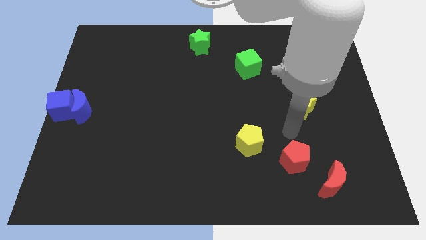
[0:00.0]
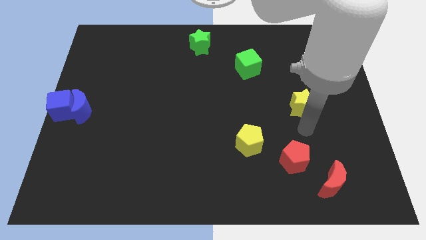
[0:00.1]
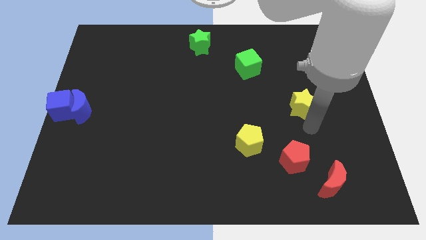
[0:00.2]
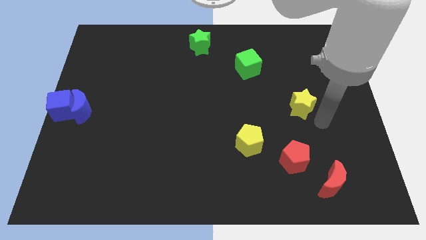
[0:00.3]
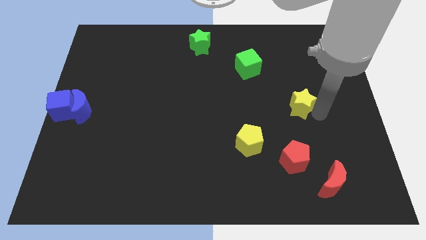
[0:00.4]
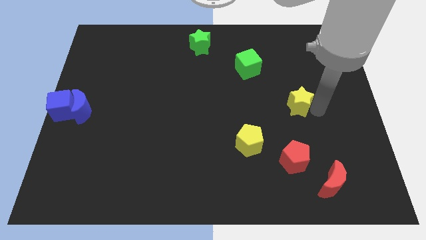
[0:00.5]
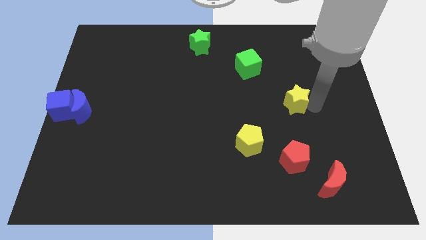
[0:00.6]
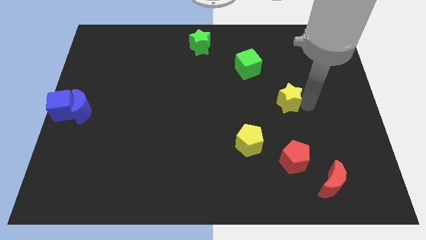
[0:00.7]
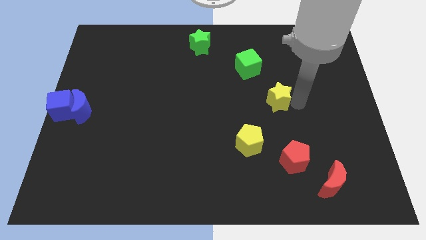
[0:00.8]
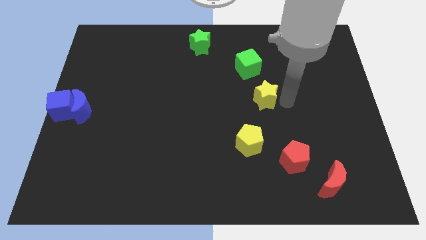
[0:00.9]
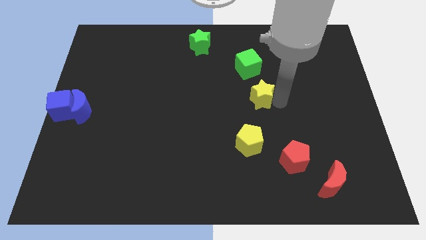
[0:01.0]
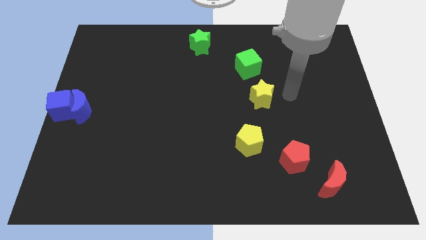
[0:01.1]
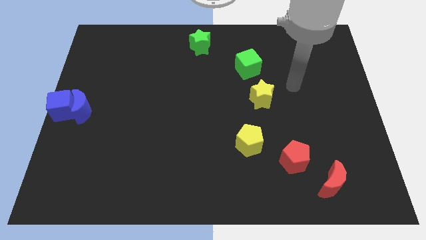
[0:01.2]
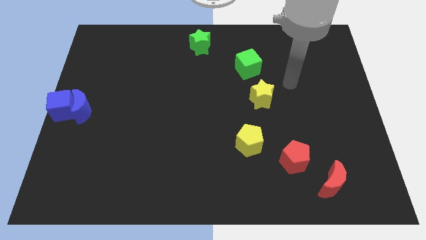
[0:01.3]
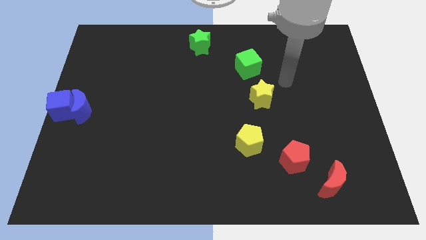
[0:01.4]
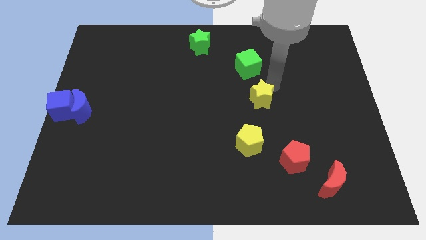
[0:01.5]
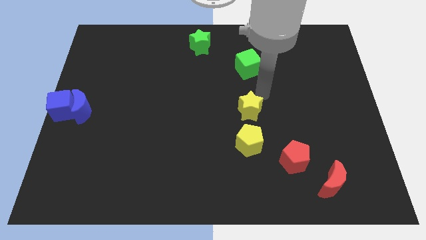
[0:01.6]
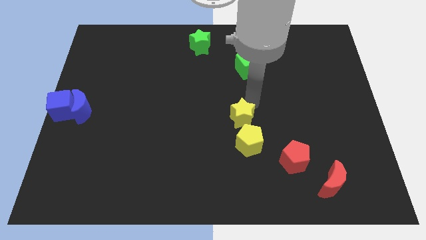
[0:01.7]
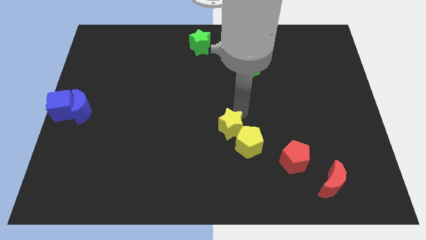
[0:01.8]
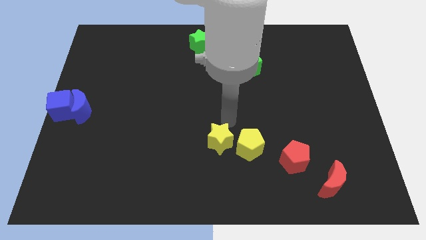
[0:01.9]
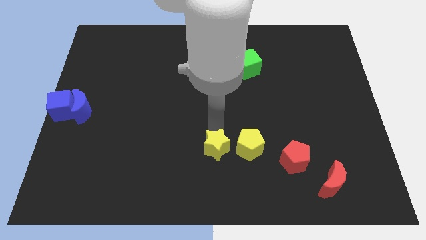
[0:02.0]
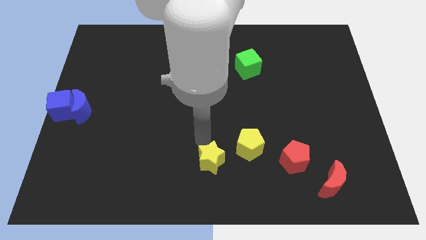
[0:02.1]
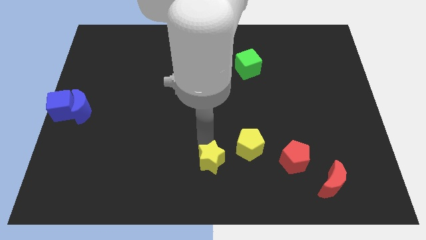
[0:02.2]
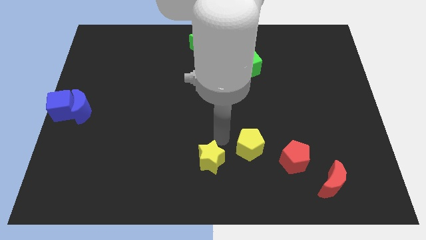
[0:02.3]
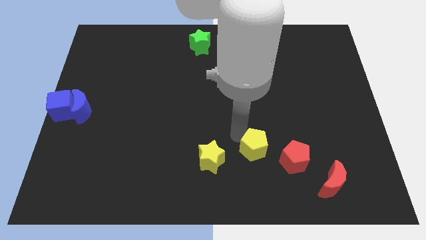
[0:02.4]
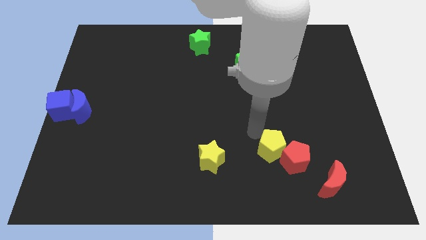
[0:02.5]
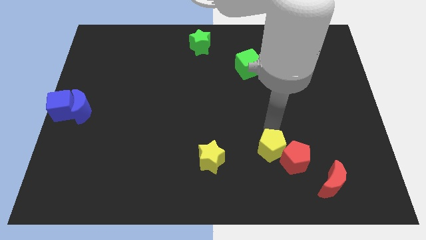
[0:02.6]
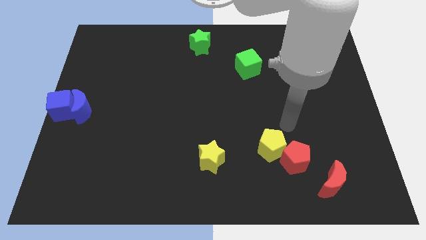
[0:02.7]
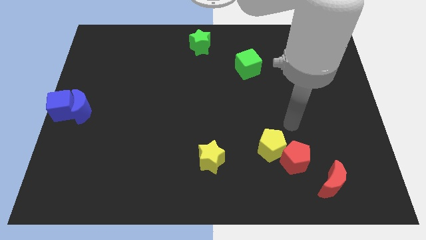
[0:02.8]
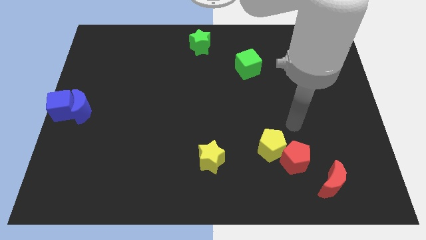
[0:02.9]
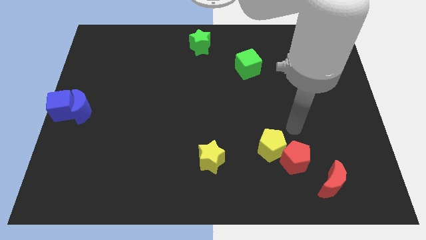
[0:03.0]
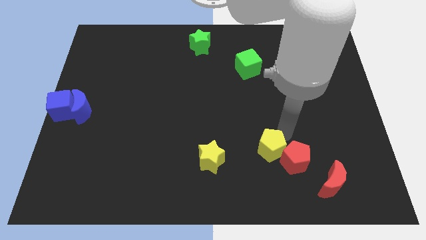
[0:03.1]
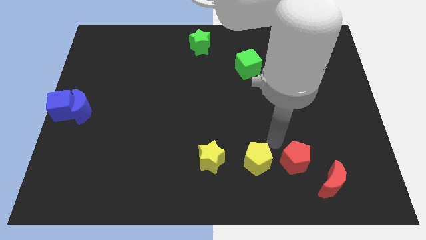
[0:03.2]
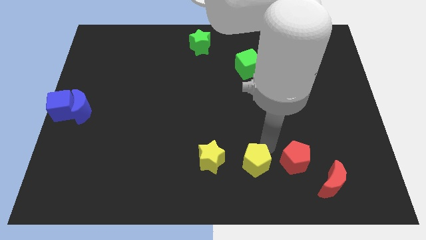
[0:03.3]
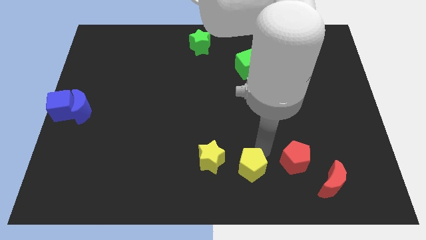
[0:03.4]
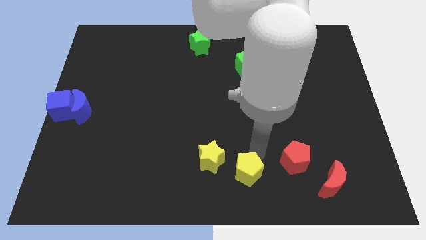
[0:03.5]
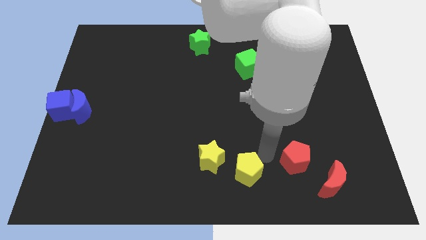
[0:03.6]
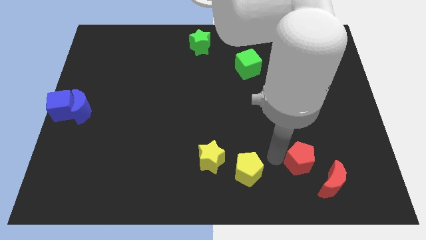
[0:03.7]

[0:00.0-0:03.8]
place yellow blocks in a horizontal line

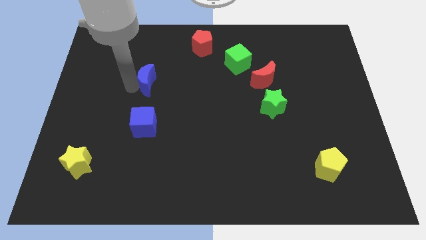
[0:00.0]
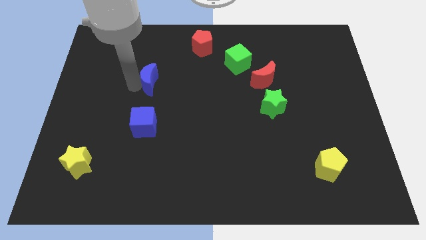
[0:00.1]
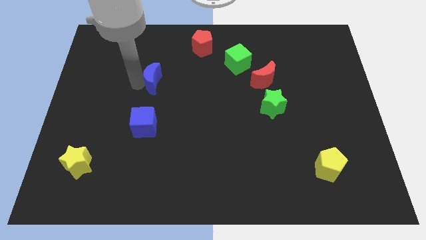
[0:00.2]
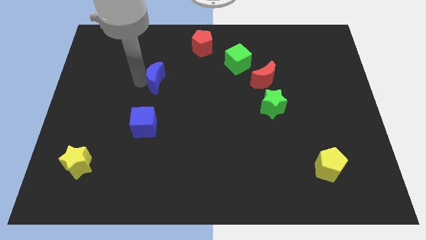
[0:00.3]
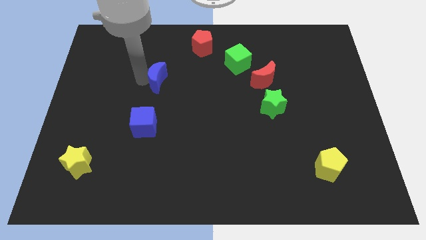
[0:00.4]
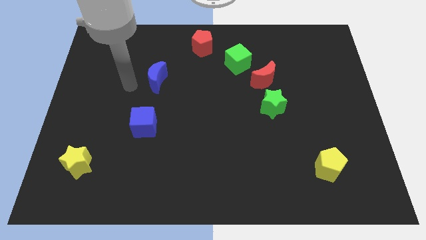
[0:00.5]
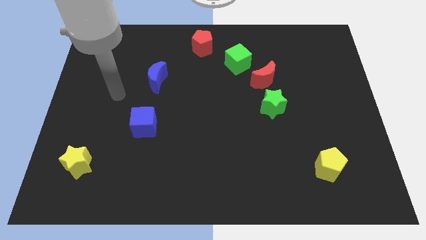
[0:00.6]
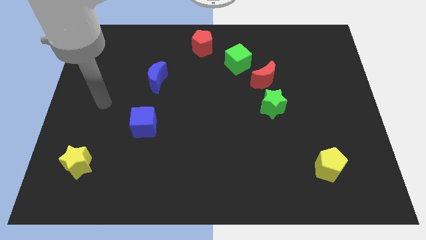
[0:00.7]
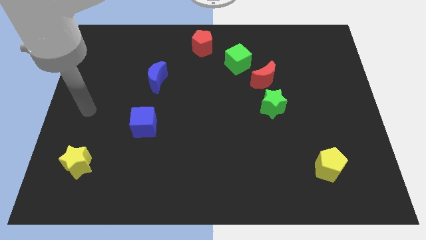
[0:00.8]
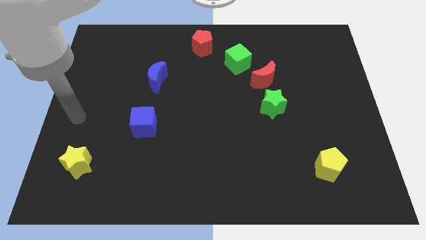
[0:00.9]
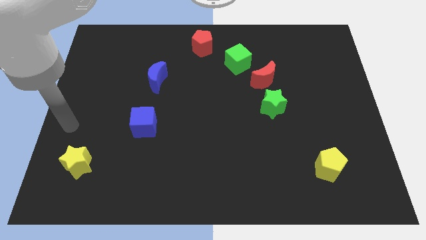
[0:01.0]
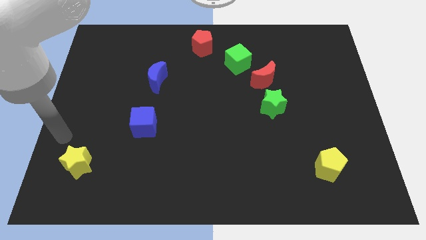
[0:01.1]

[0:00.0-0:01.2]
slightly push the blue moon to the right

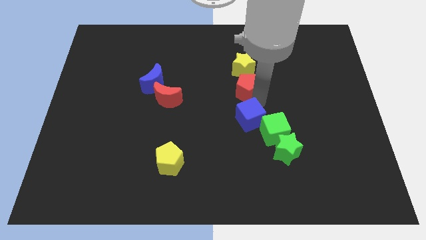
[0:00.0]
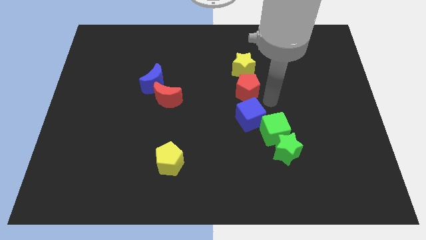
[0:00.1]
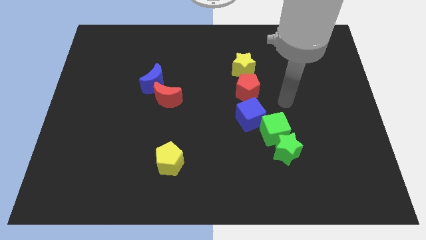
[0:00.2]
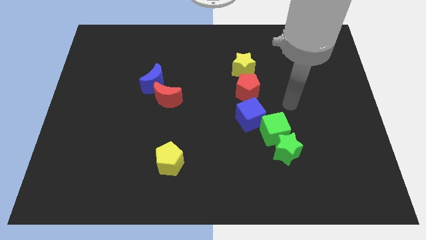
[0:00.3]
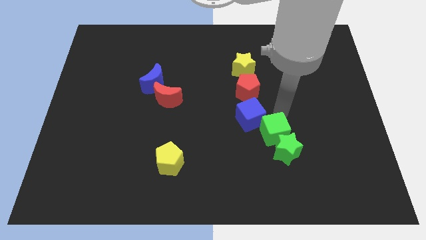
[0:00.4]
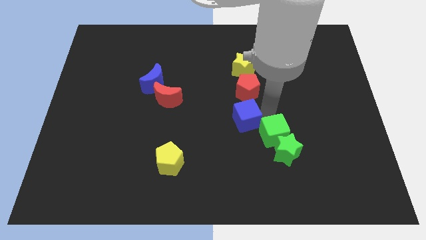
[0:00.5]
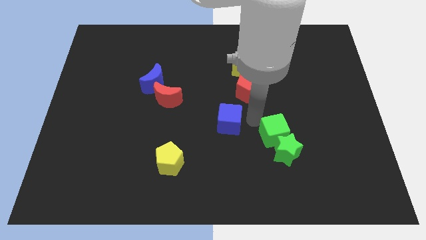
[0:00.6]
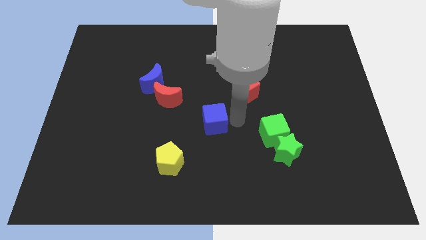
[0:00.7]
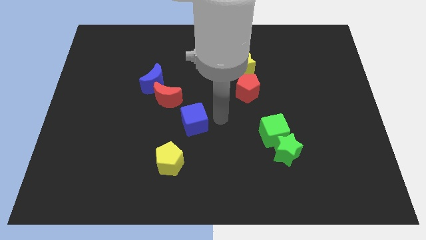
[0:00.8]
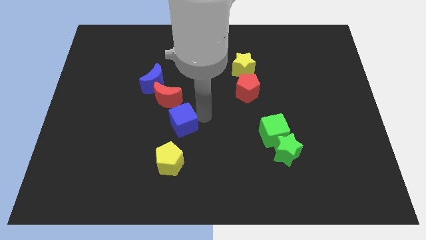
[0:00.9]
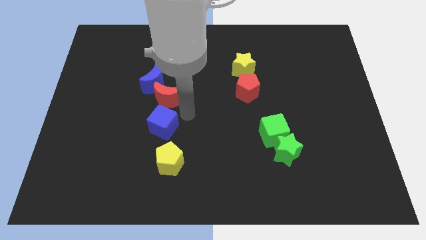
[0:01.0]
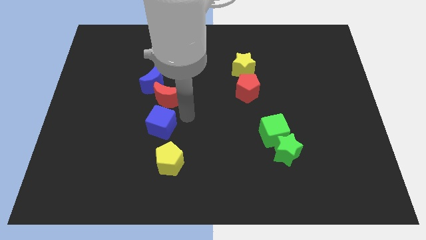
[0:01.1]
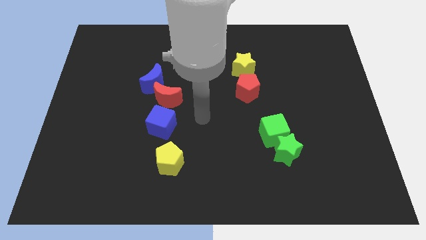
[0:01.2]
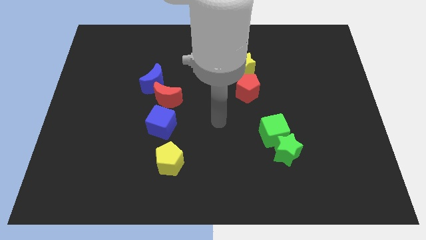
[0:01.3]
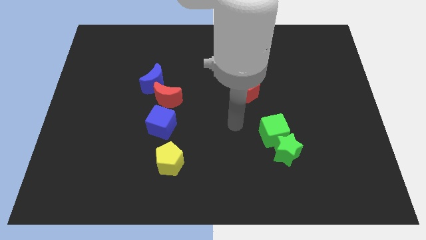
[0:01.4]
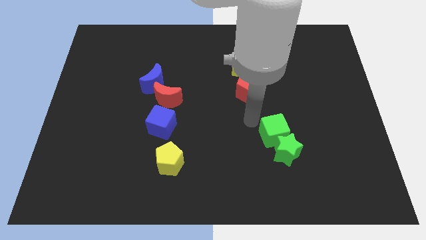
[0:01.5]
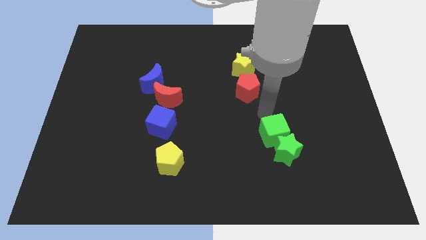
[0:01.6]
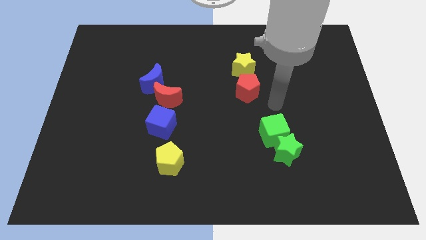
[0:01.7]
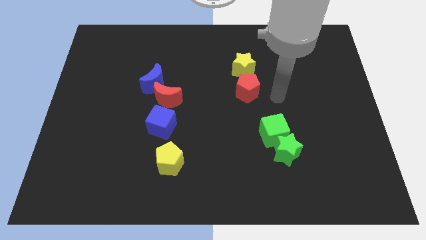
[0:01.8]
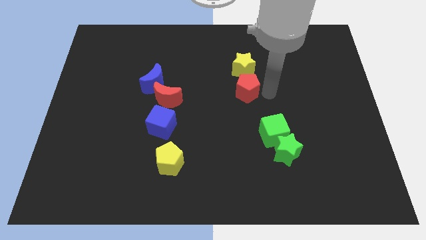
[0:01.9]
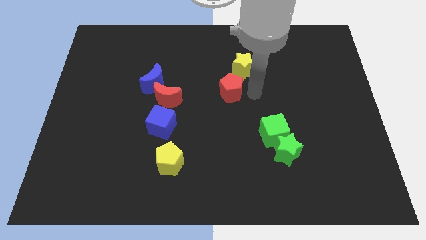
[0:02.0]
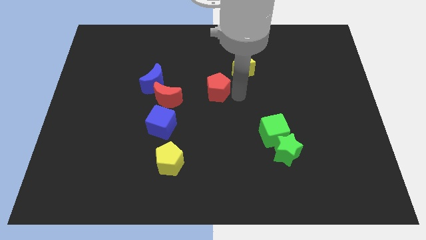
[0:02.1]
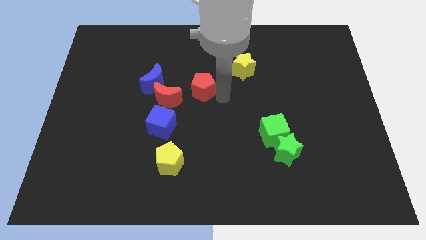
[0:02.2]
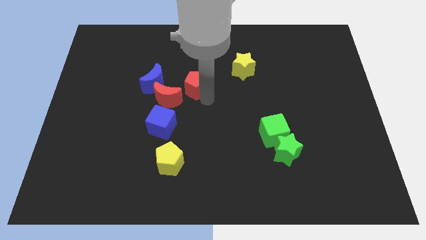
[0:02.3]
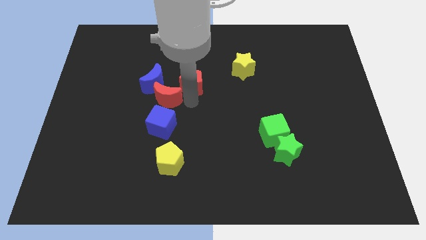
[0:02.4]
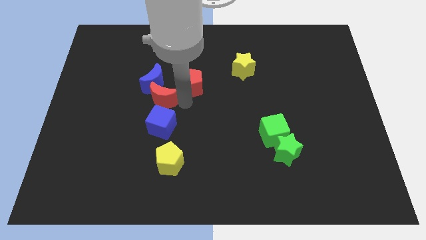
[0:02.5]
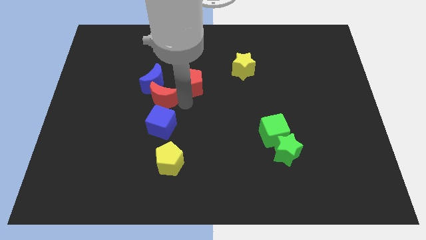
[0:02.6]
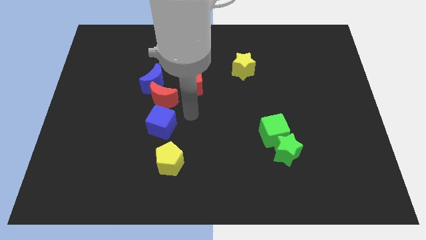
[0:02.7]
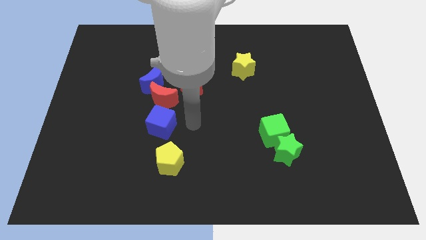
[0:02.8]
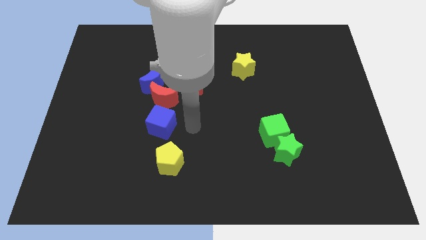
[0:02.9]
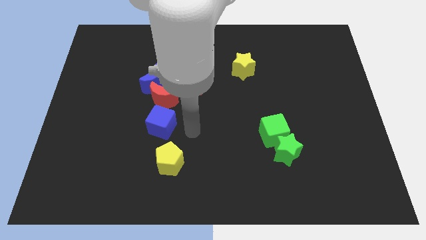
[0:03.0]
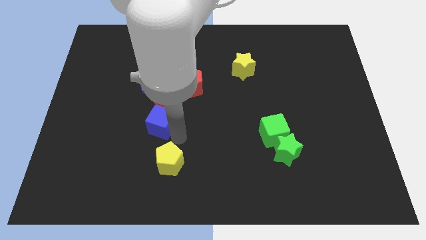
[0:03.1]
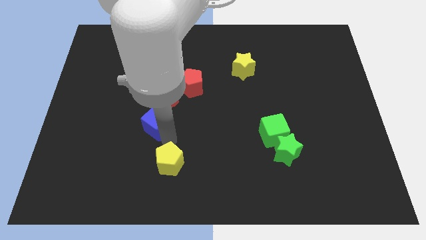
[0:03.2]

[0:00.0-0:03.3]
separate red pentagon and the blue cube from each other

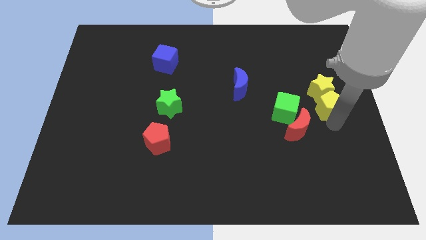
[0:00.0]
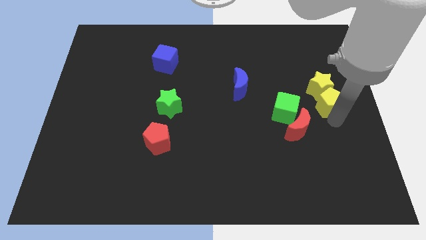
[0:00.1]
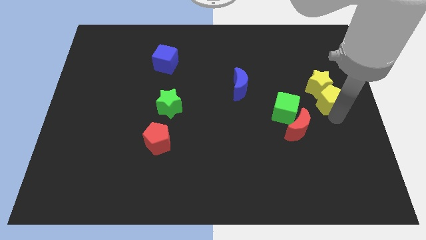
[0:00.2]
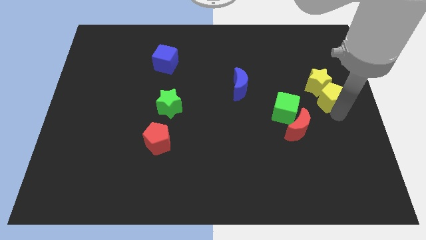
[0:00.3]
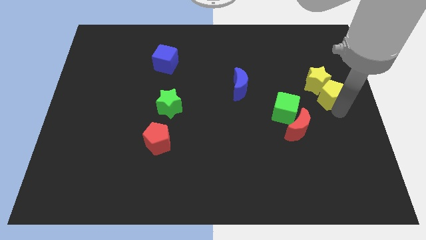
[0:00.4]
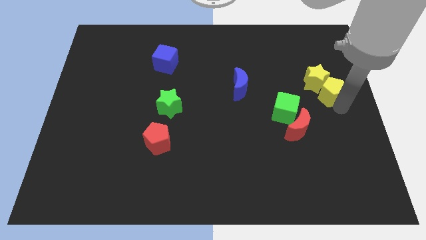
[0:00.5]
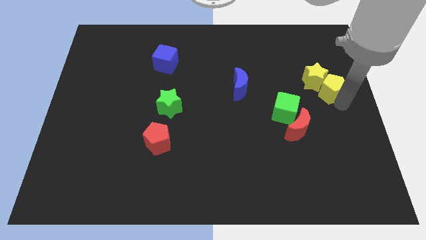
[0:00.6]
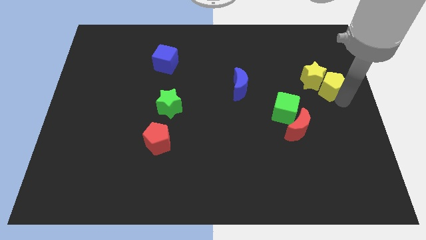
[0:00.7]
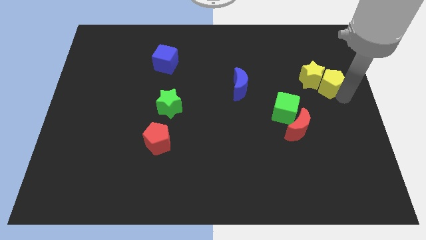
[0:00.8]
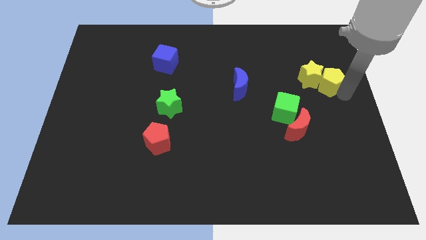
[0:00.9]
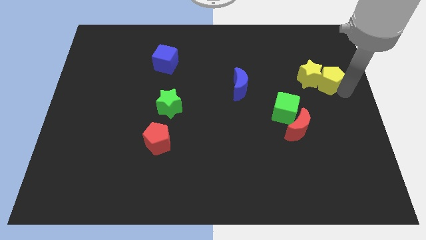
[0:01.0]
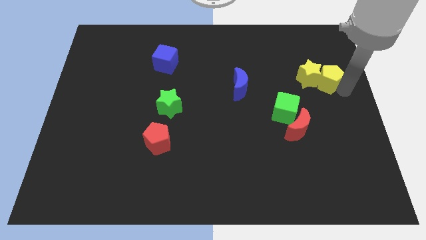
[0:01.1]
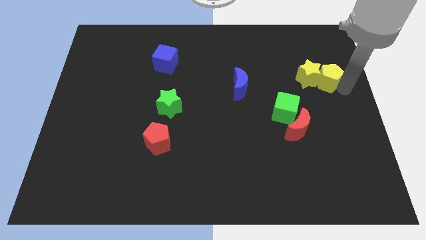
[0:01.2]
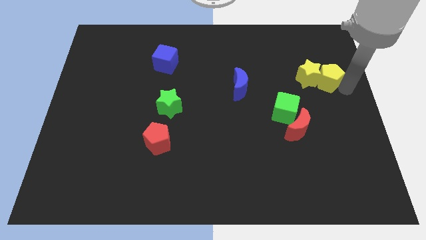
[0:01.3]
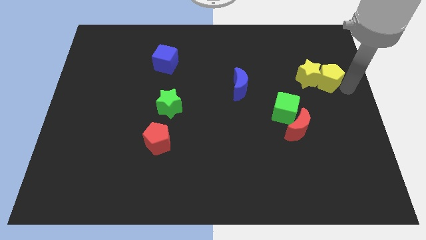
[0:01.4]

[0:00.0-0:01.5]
push the yellow pentagon along with the yellow star towards the right top of the board
